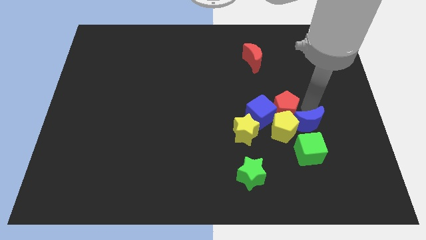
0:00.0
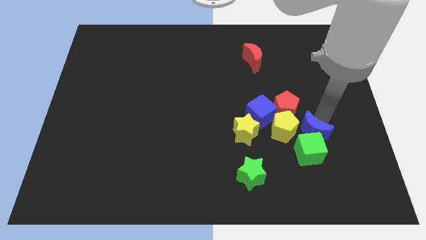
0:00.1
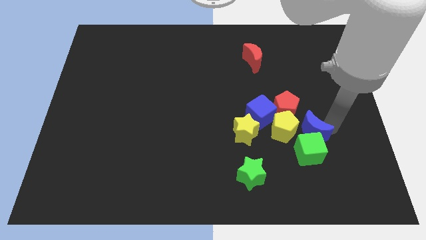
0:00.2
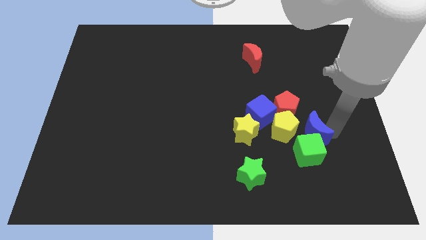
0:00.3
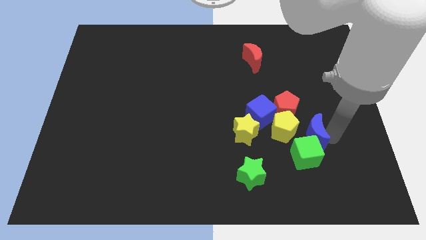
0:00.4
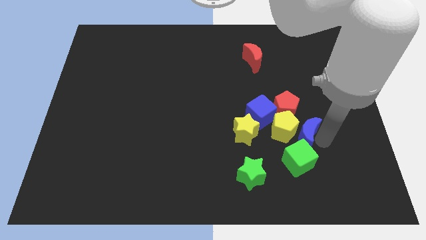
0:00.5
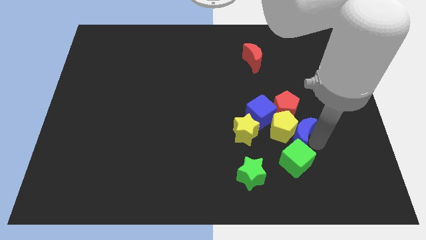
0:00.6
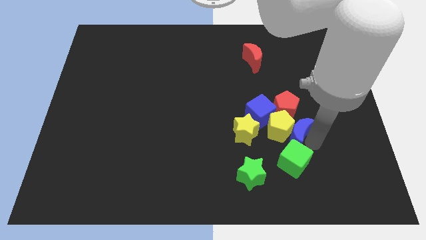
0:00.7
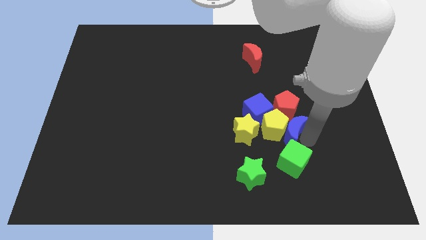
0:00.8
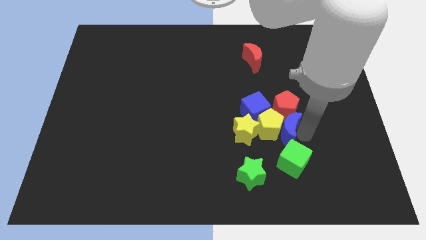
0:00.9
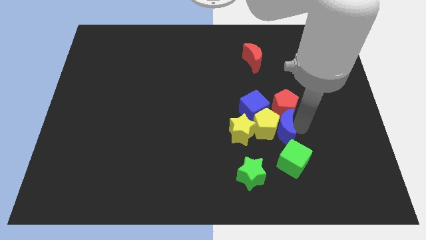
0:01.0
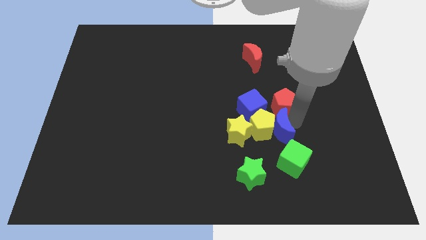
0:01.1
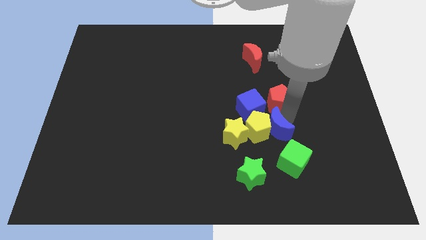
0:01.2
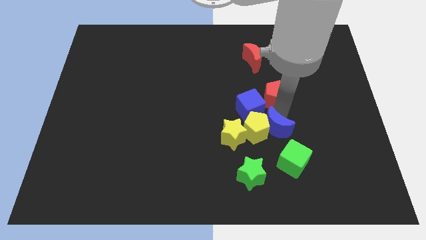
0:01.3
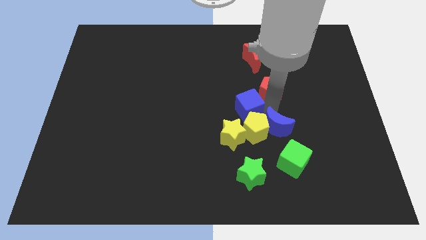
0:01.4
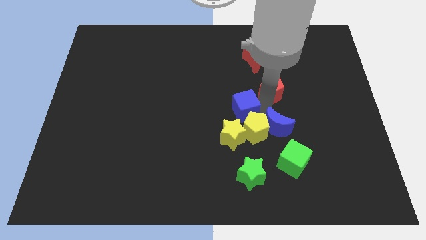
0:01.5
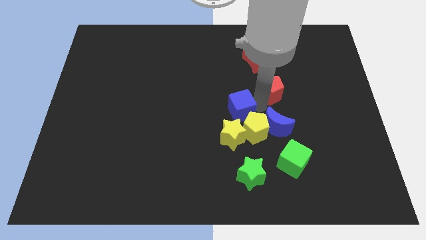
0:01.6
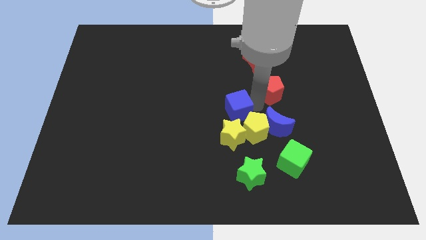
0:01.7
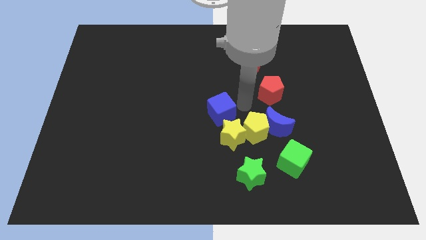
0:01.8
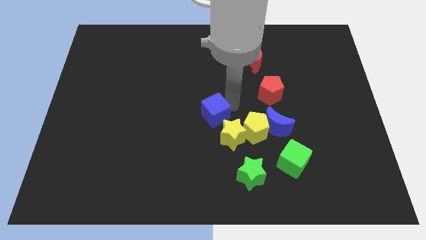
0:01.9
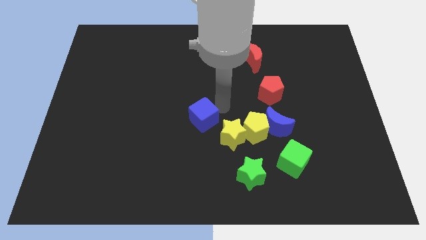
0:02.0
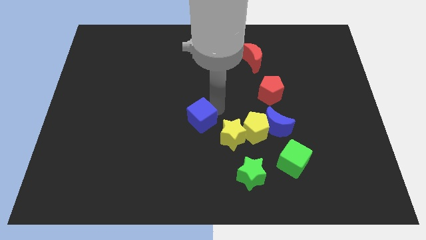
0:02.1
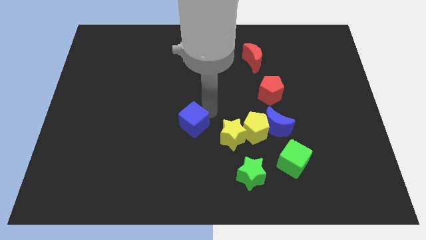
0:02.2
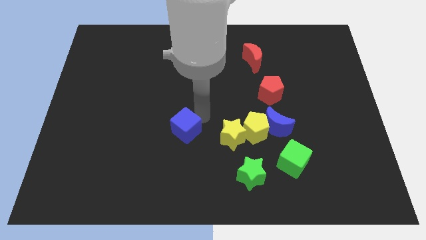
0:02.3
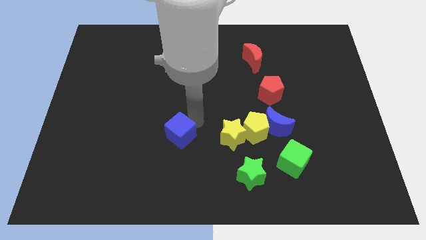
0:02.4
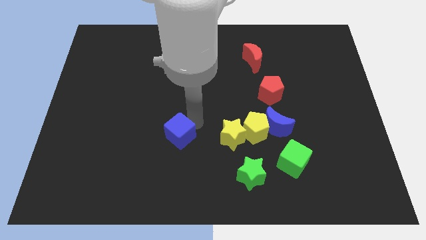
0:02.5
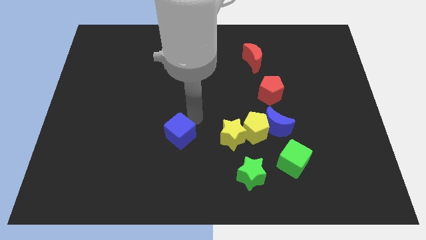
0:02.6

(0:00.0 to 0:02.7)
place blue cube to the left of yellow star

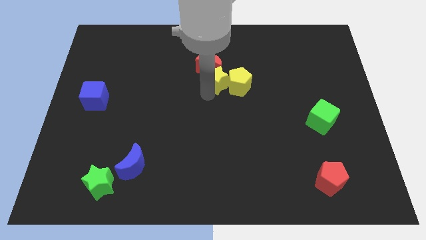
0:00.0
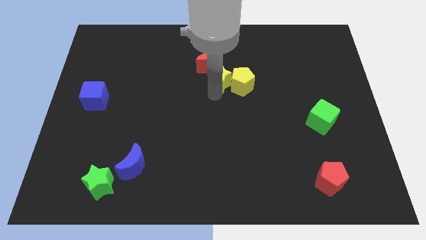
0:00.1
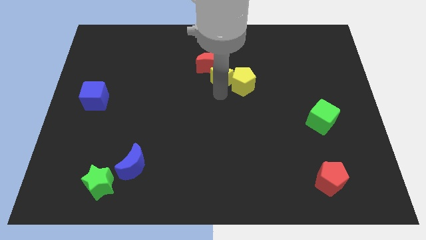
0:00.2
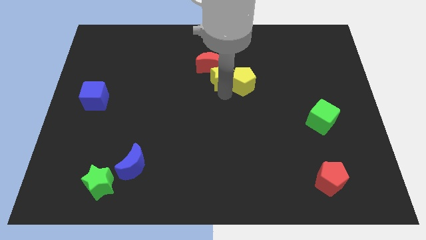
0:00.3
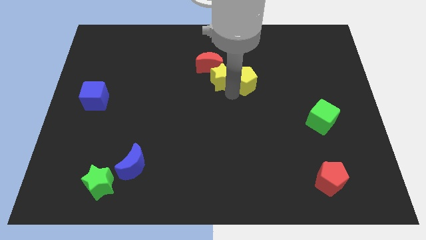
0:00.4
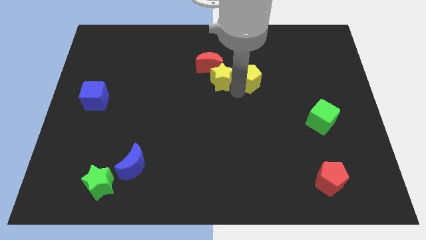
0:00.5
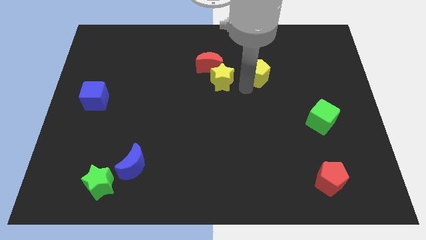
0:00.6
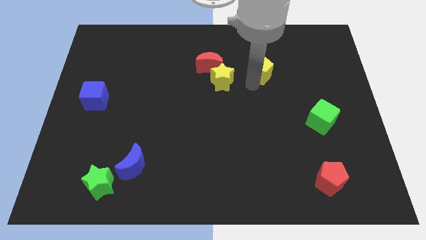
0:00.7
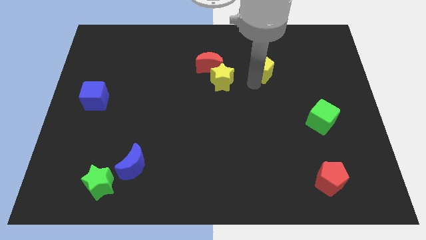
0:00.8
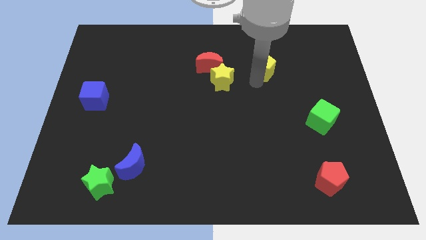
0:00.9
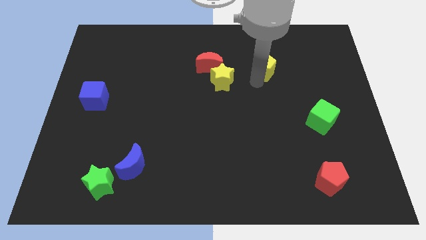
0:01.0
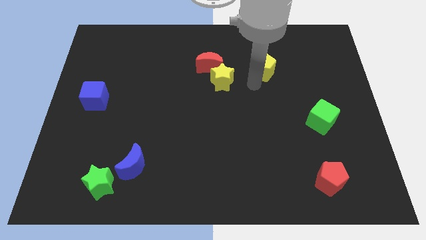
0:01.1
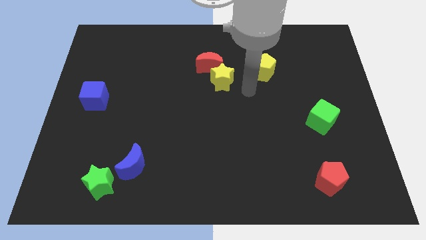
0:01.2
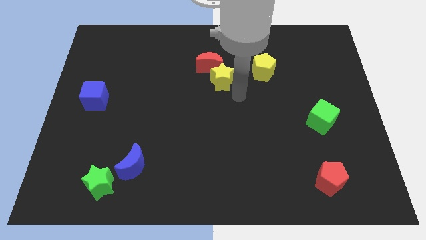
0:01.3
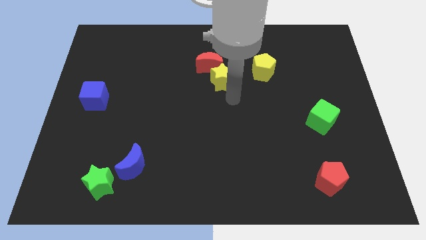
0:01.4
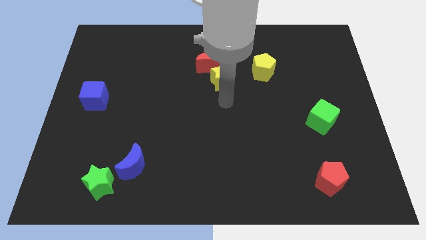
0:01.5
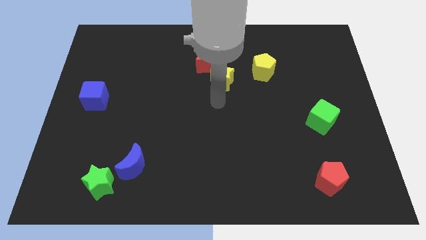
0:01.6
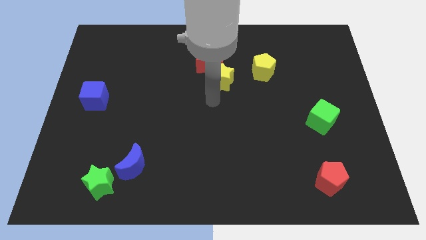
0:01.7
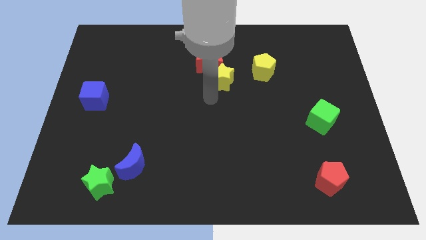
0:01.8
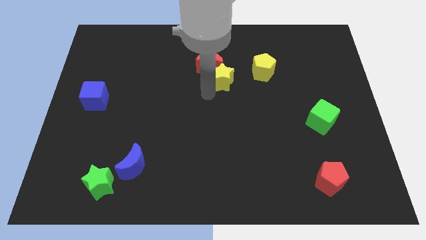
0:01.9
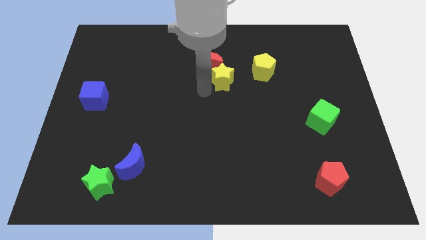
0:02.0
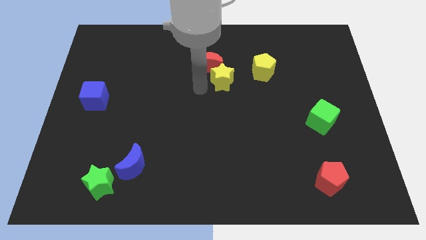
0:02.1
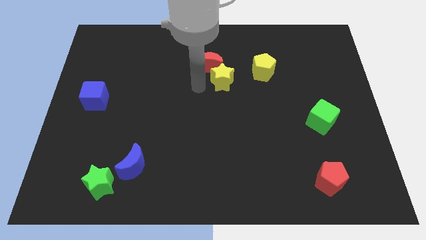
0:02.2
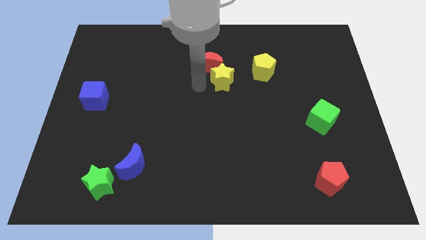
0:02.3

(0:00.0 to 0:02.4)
move the yellow pentagon away from the yellow star

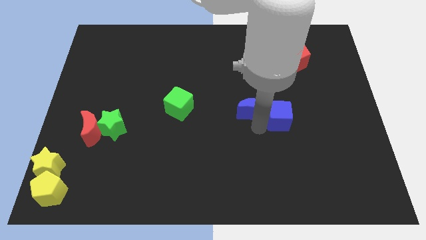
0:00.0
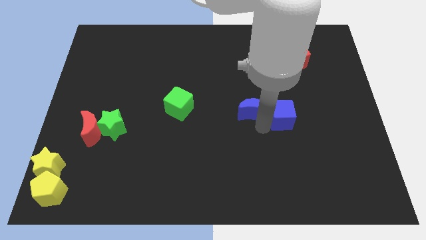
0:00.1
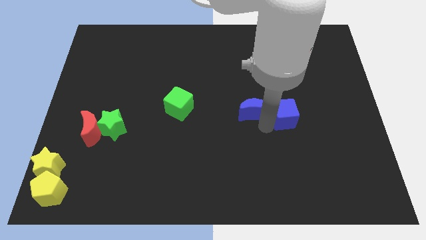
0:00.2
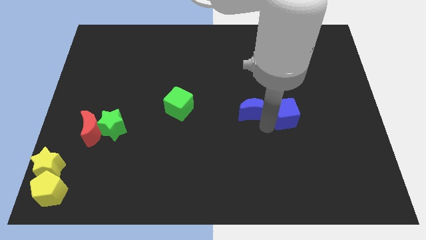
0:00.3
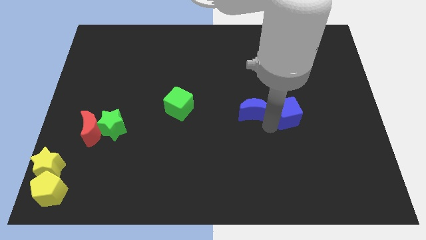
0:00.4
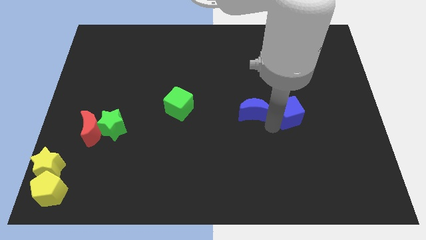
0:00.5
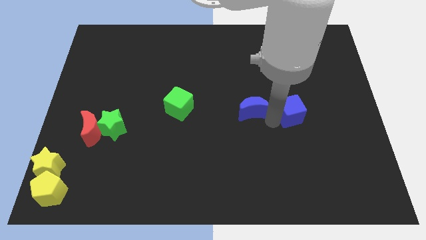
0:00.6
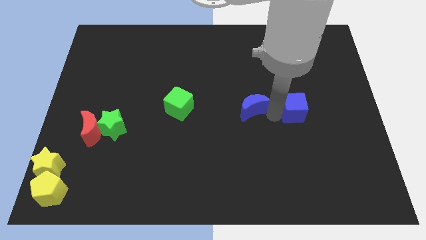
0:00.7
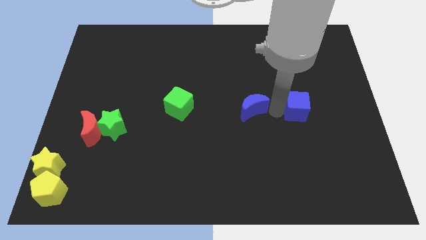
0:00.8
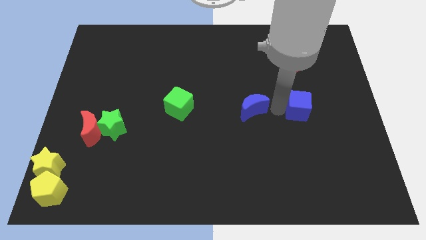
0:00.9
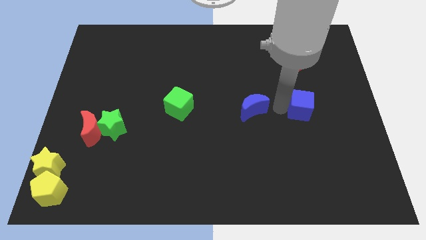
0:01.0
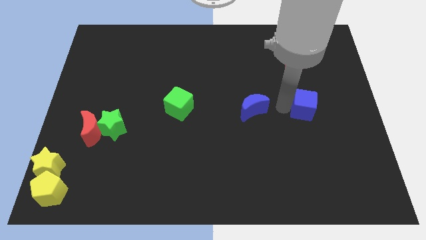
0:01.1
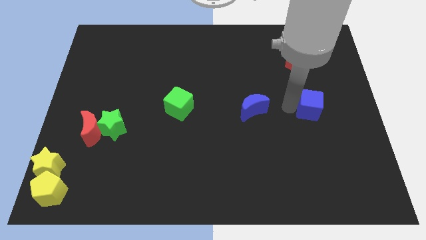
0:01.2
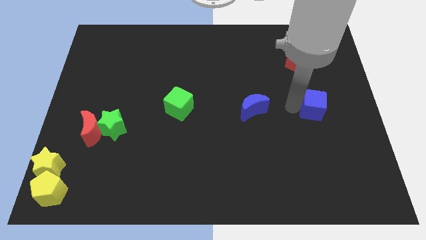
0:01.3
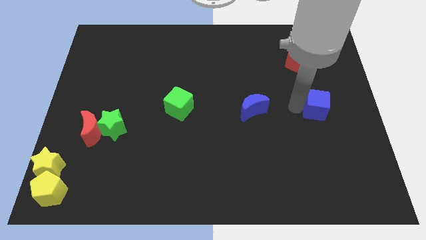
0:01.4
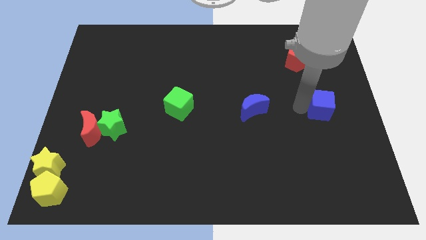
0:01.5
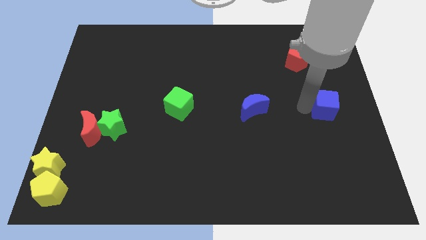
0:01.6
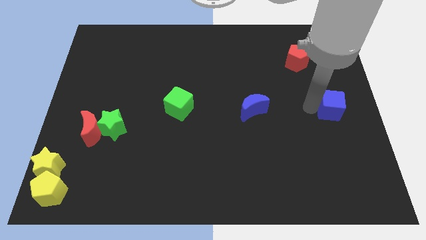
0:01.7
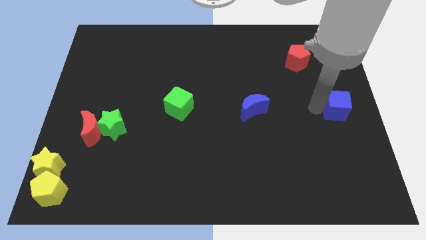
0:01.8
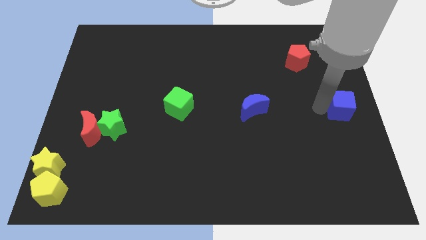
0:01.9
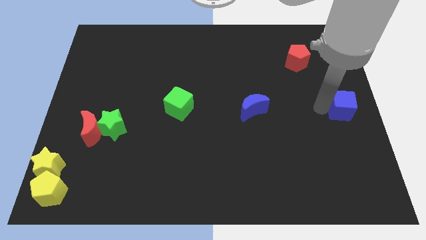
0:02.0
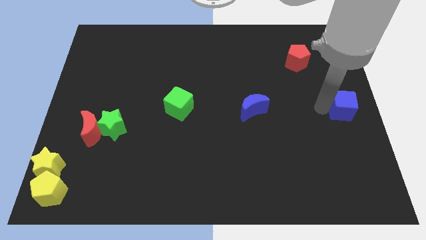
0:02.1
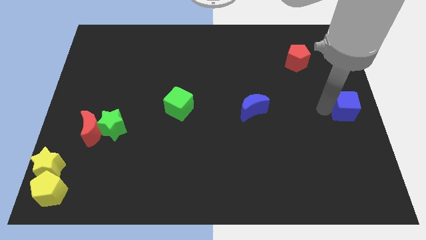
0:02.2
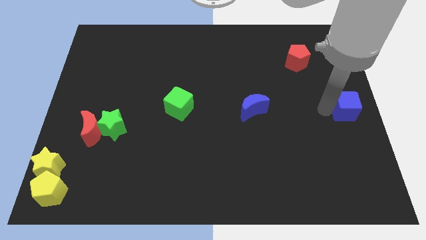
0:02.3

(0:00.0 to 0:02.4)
separate the blue cube from the blue crescent

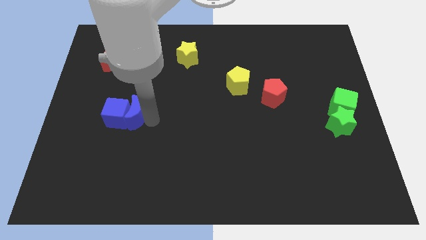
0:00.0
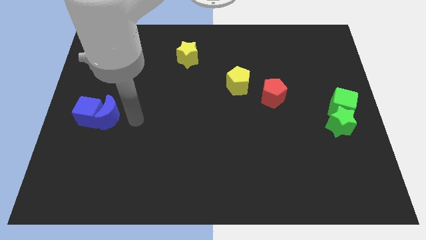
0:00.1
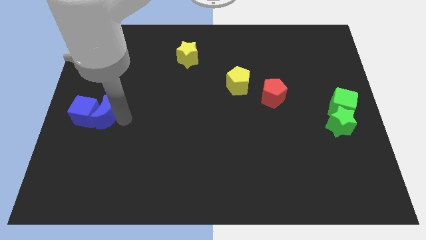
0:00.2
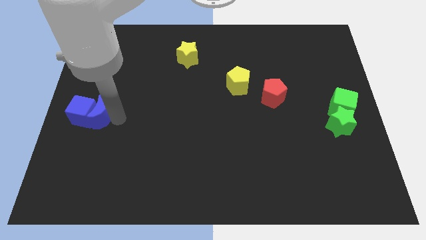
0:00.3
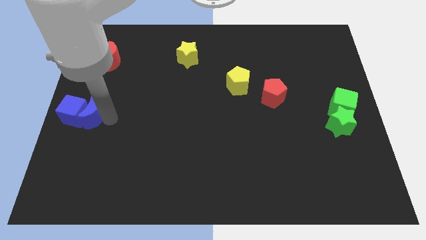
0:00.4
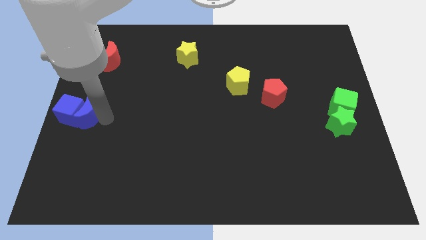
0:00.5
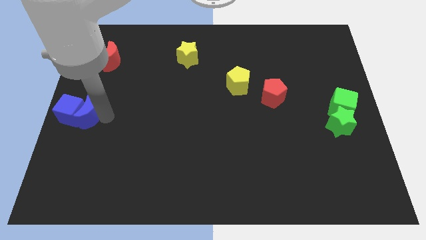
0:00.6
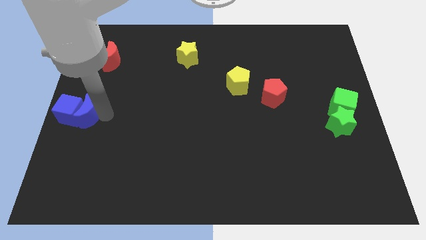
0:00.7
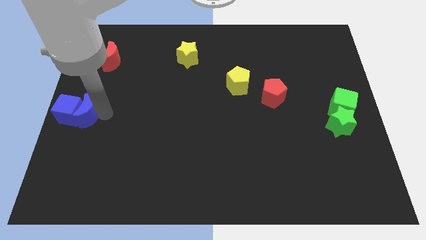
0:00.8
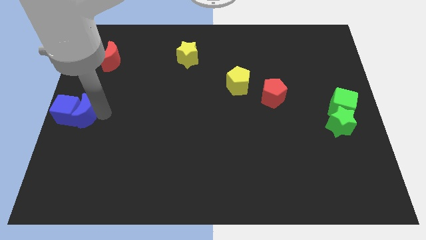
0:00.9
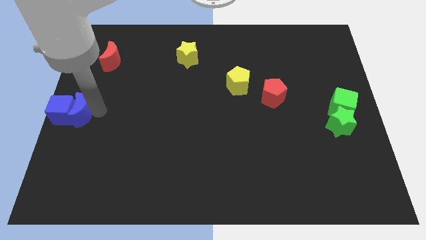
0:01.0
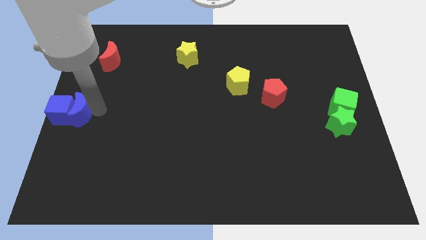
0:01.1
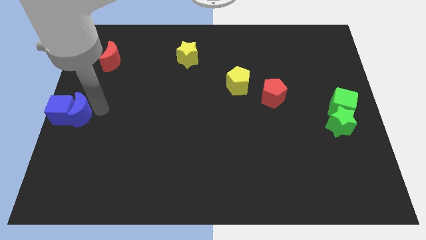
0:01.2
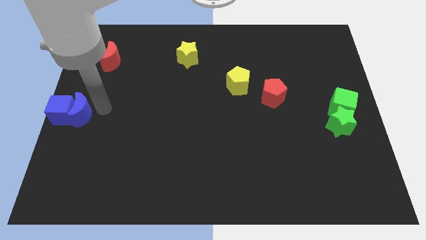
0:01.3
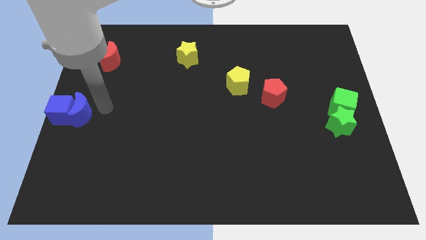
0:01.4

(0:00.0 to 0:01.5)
push the blue cube with the blue crescent to the left center of the board

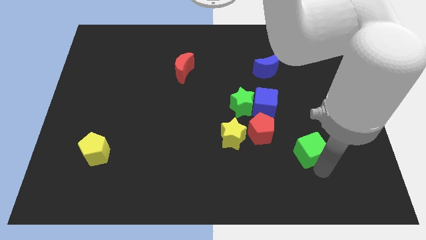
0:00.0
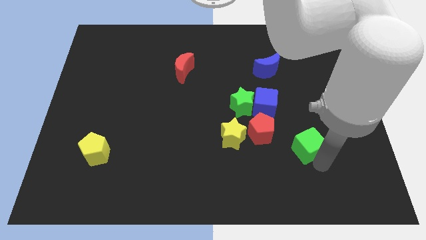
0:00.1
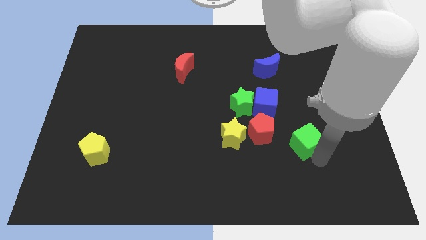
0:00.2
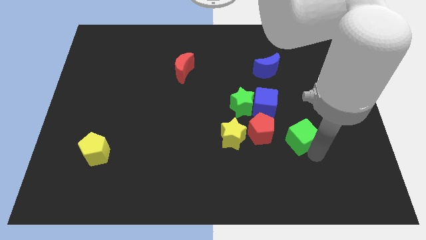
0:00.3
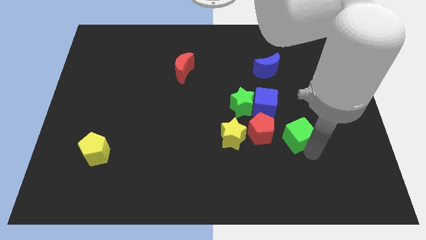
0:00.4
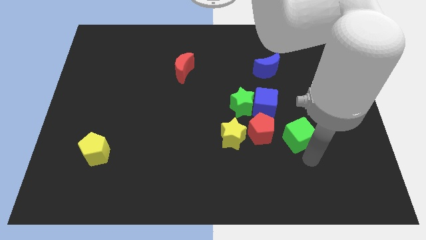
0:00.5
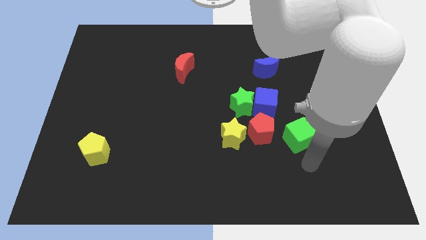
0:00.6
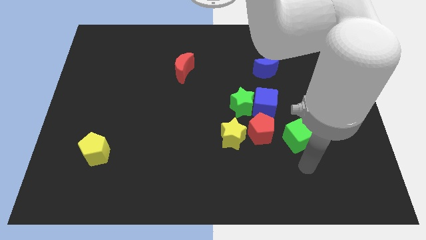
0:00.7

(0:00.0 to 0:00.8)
place green cube right to red pentagon
